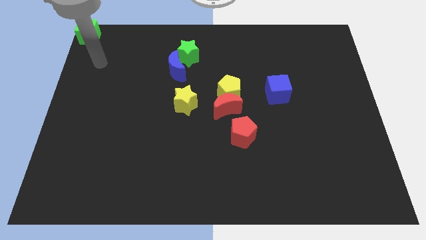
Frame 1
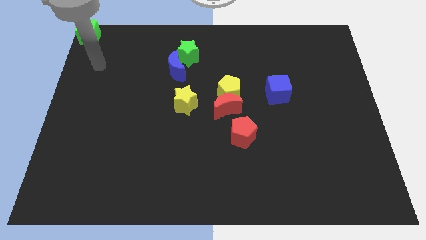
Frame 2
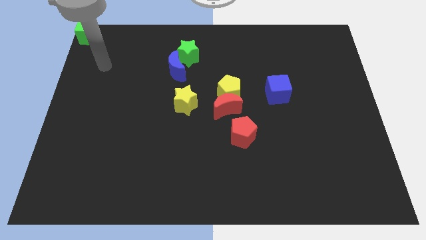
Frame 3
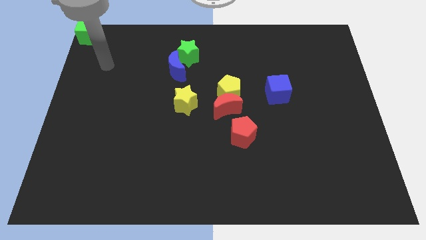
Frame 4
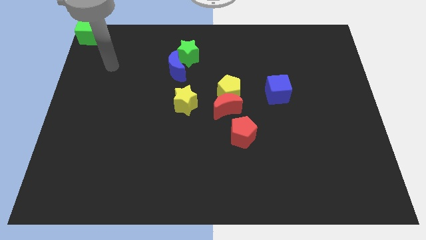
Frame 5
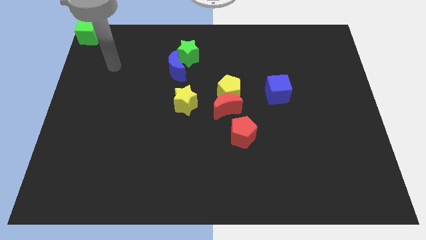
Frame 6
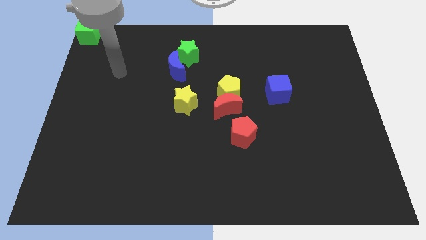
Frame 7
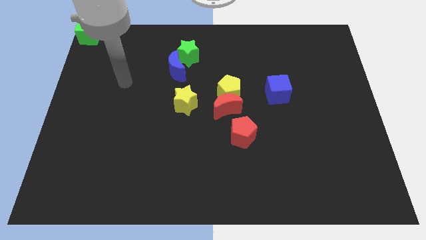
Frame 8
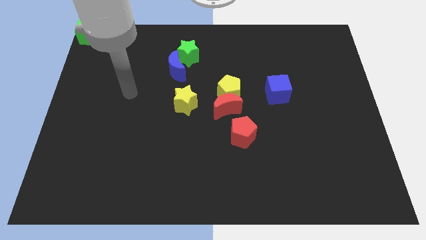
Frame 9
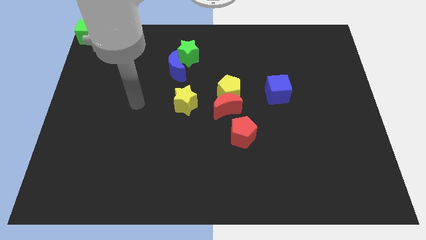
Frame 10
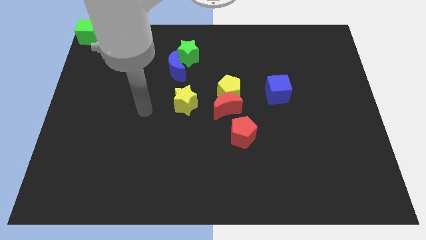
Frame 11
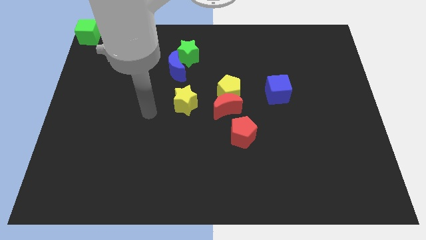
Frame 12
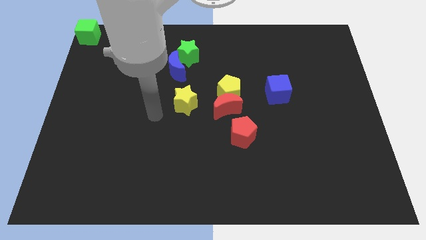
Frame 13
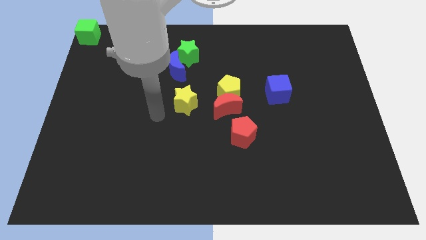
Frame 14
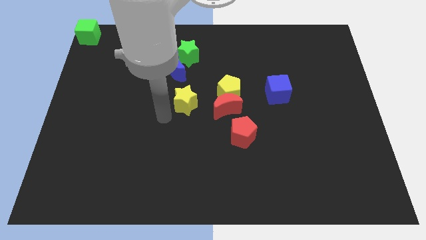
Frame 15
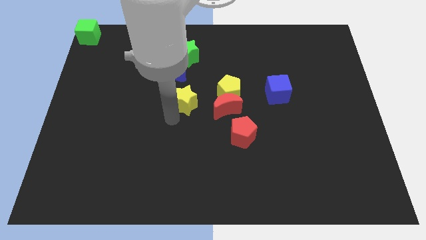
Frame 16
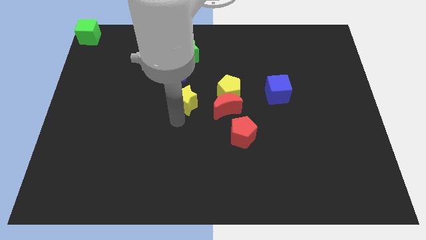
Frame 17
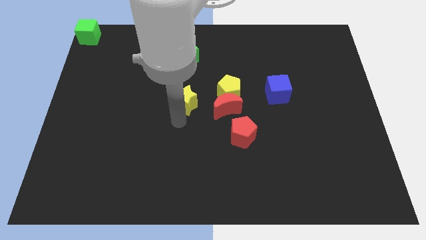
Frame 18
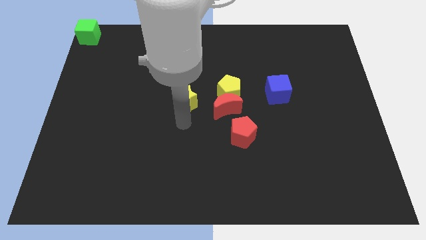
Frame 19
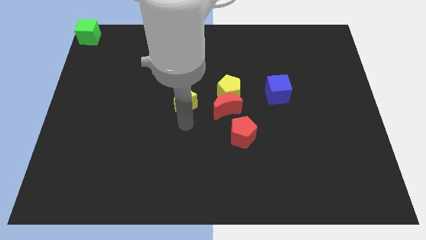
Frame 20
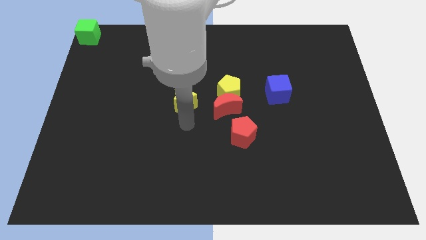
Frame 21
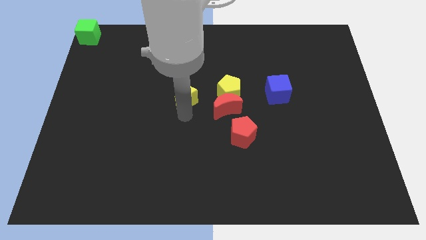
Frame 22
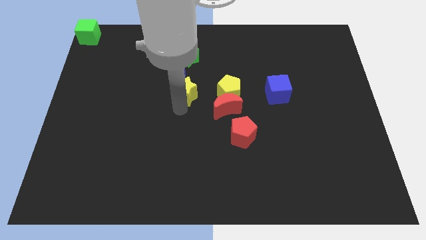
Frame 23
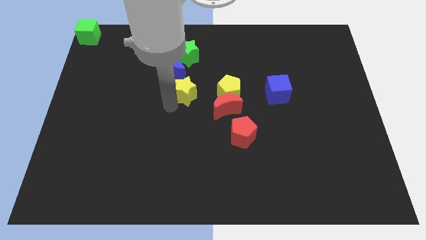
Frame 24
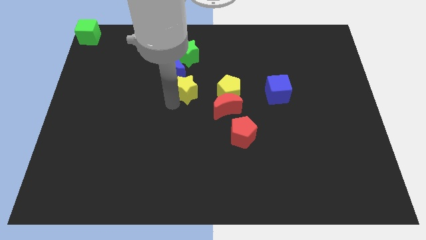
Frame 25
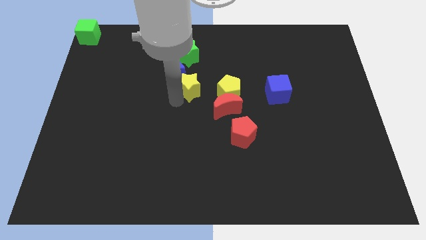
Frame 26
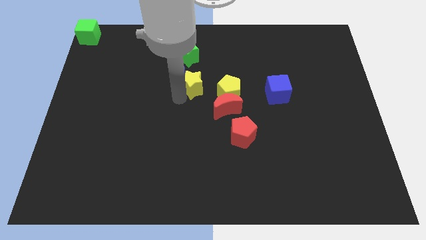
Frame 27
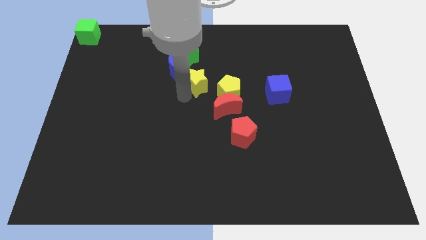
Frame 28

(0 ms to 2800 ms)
move arm near yellow star

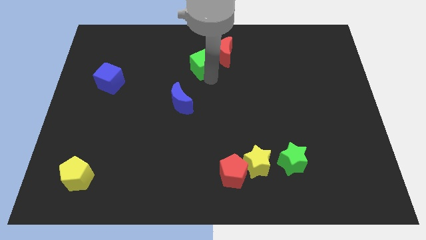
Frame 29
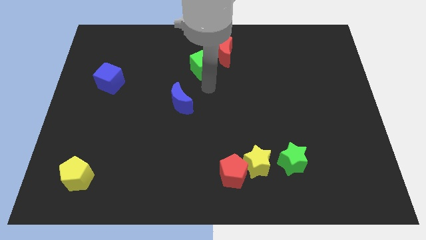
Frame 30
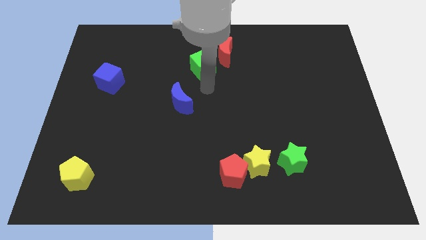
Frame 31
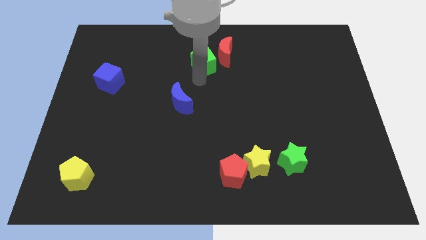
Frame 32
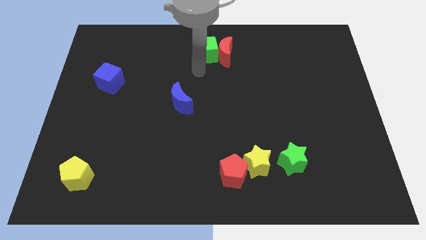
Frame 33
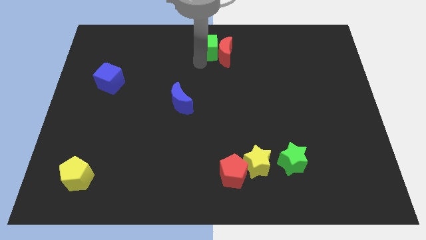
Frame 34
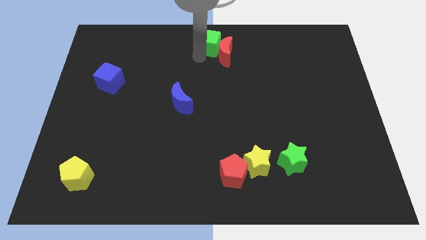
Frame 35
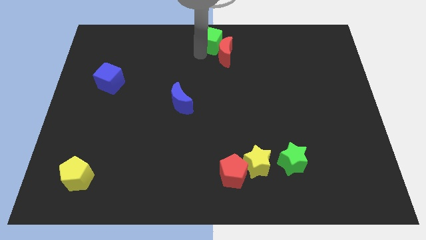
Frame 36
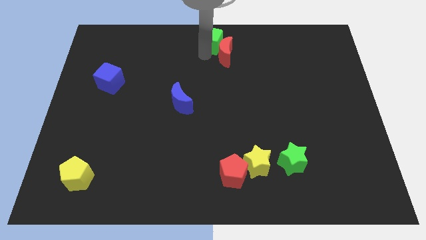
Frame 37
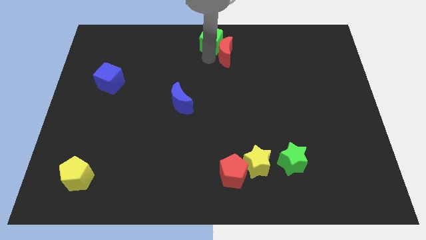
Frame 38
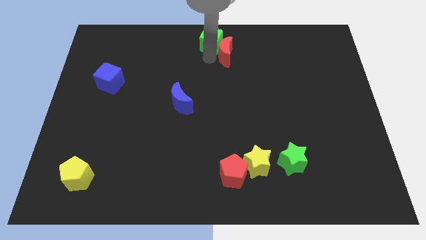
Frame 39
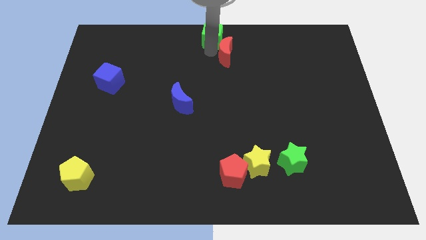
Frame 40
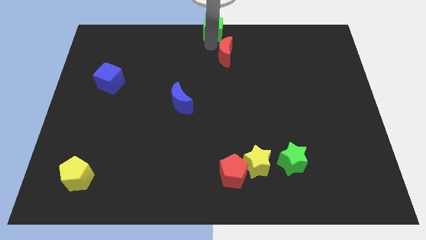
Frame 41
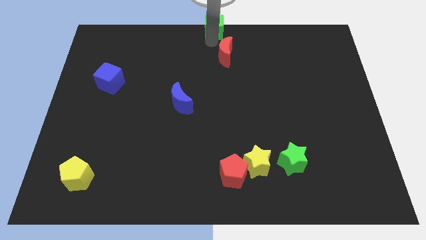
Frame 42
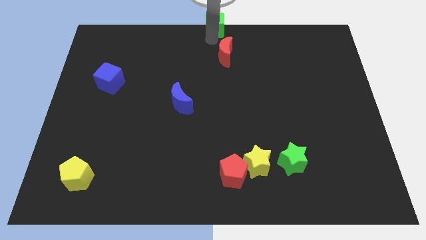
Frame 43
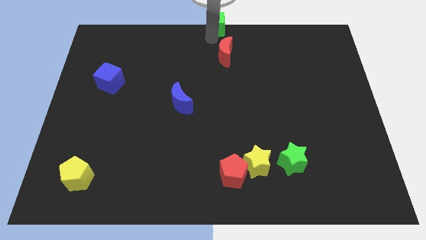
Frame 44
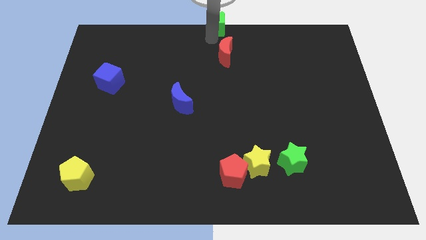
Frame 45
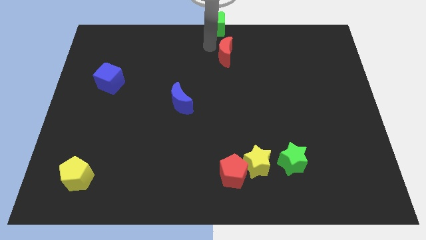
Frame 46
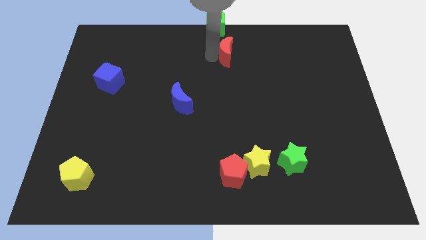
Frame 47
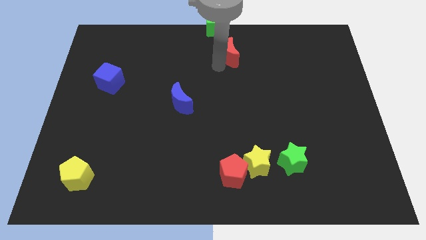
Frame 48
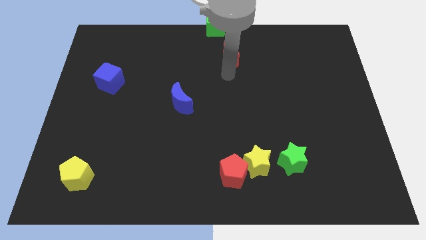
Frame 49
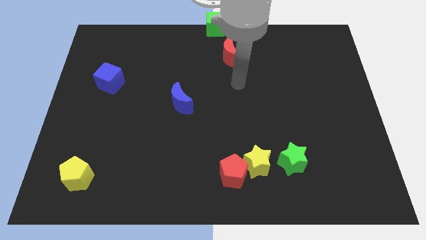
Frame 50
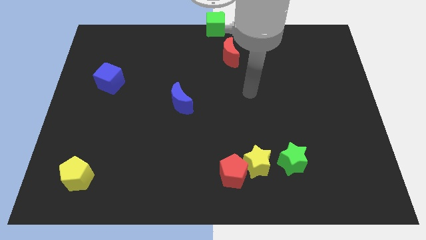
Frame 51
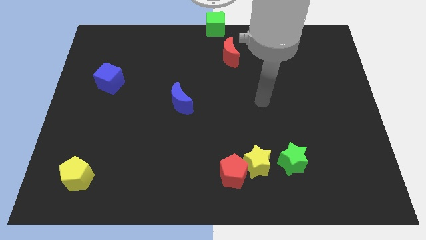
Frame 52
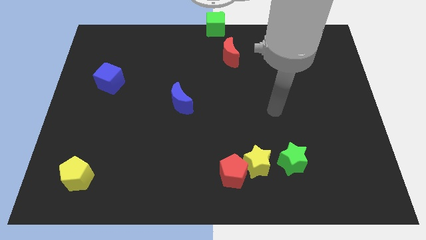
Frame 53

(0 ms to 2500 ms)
place green cube to the center top of the board

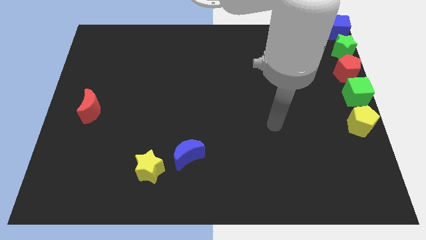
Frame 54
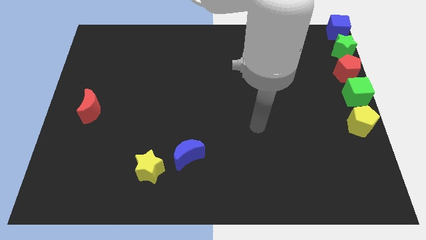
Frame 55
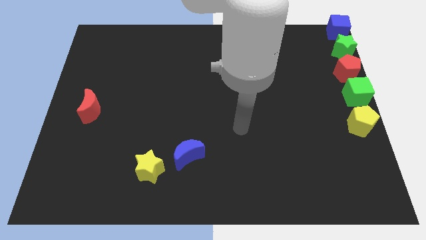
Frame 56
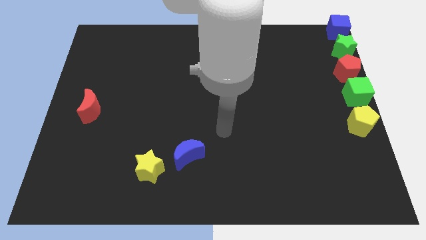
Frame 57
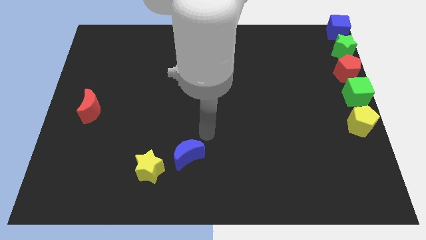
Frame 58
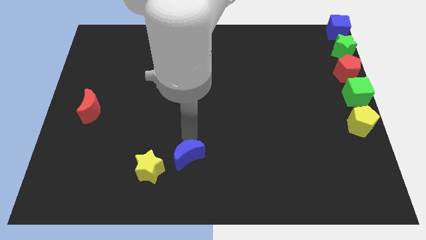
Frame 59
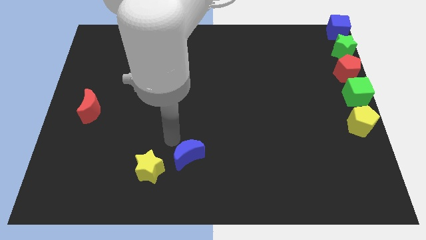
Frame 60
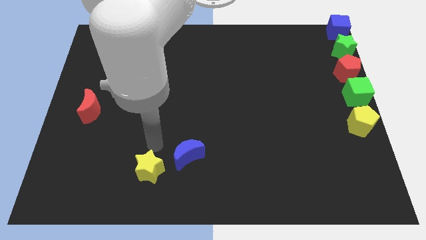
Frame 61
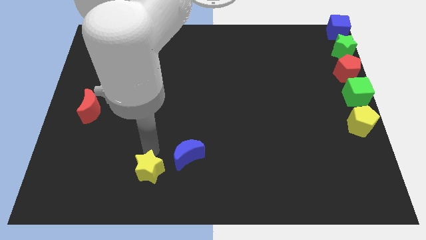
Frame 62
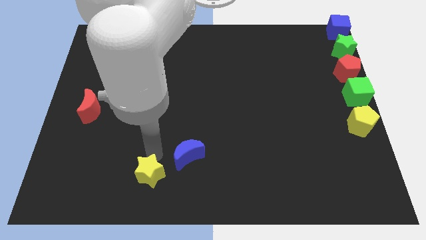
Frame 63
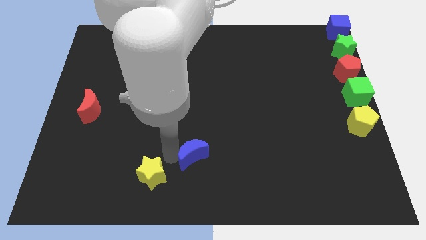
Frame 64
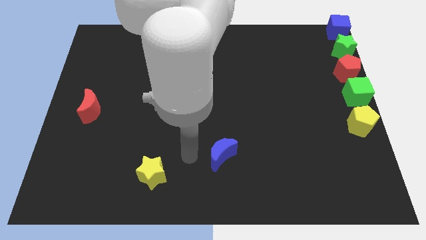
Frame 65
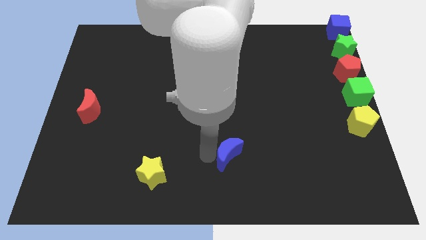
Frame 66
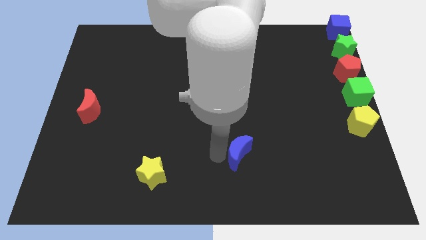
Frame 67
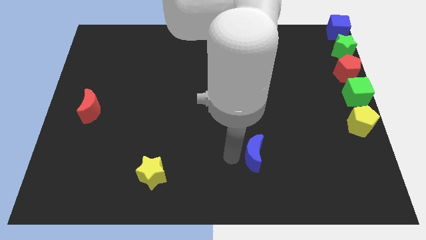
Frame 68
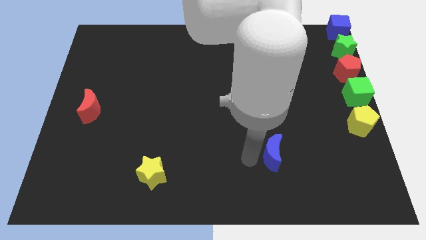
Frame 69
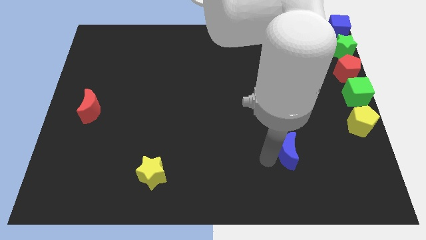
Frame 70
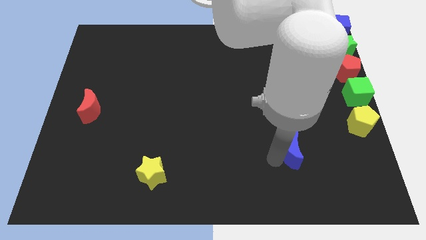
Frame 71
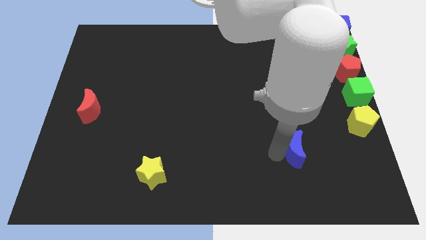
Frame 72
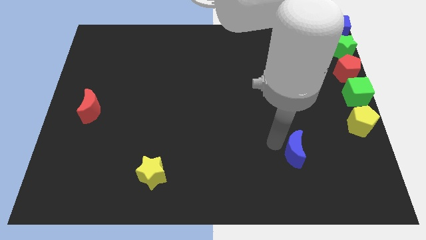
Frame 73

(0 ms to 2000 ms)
push the blue moon away from the yellow star

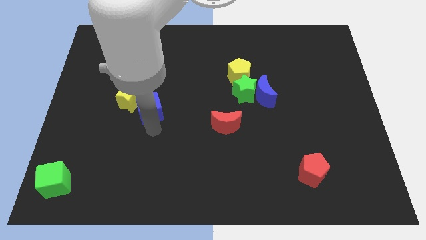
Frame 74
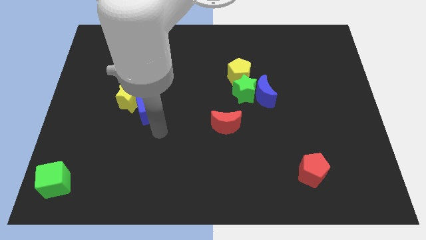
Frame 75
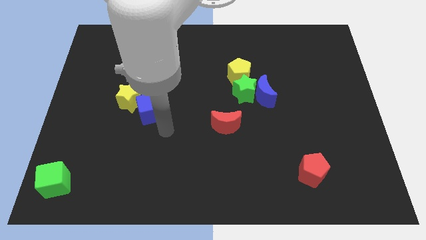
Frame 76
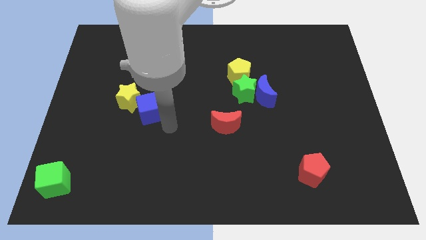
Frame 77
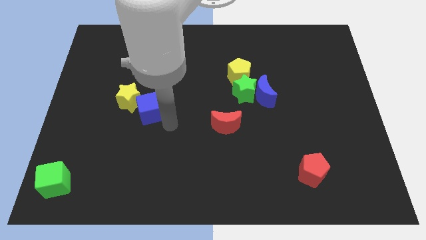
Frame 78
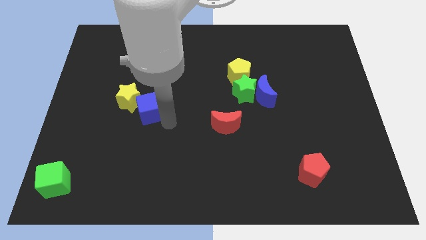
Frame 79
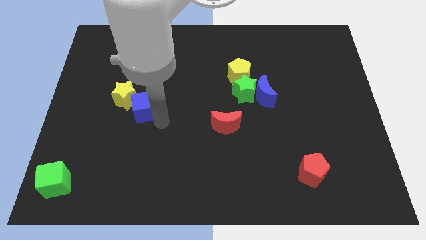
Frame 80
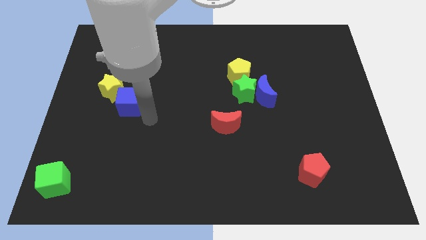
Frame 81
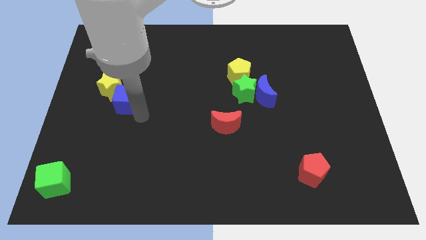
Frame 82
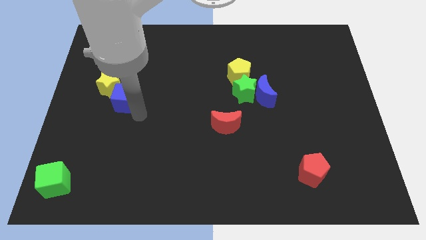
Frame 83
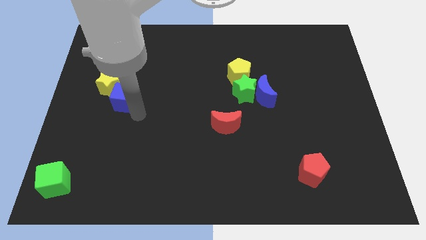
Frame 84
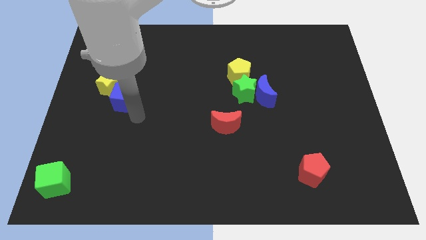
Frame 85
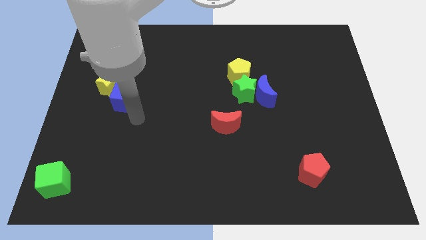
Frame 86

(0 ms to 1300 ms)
push the yellow star slightly with the blue cube

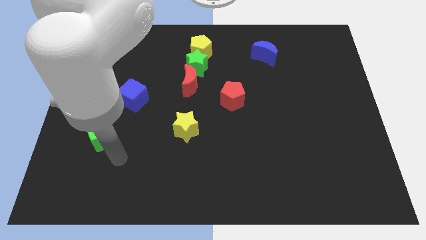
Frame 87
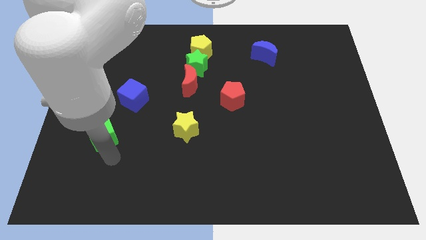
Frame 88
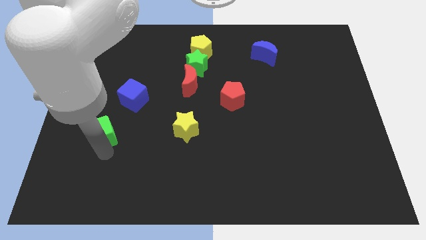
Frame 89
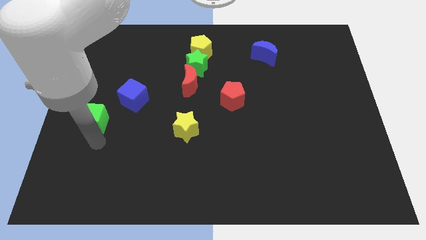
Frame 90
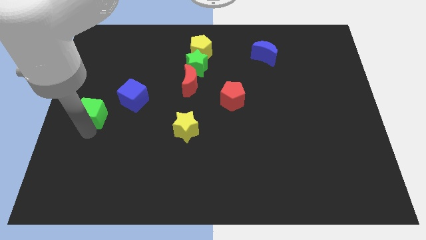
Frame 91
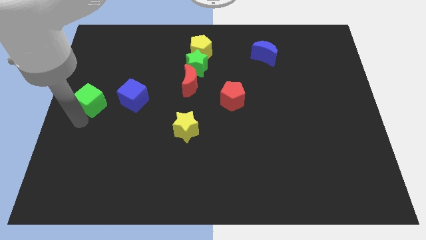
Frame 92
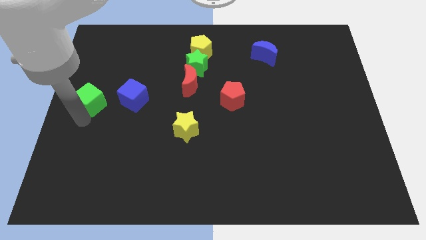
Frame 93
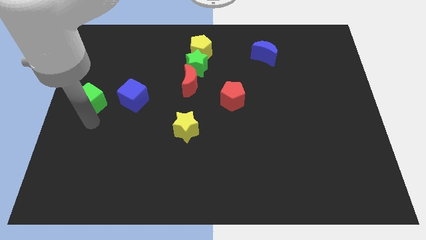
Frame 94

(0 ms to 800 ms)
place the green cube to the left of the blue cube
